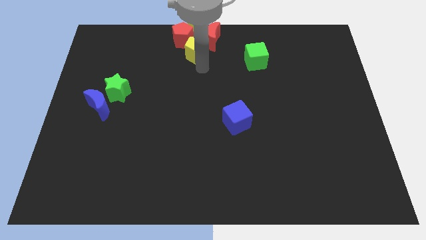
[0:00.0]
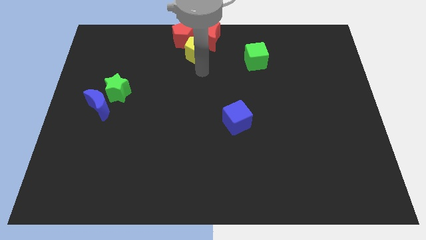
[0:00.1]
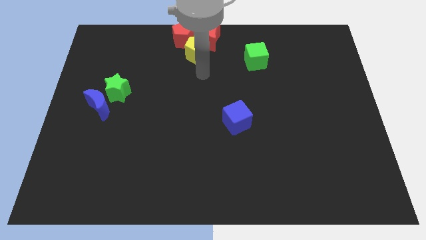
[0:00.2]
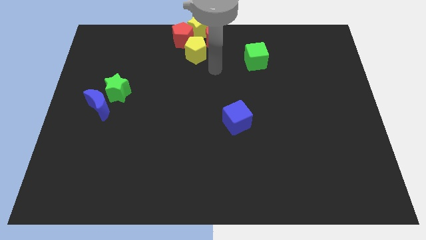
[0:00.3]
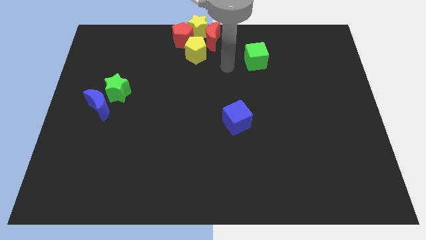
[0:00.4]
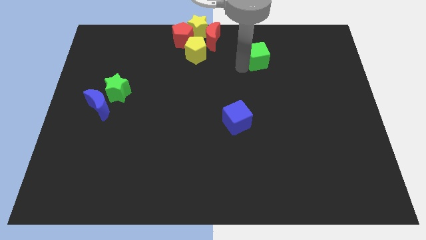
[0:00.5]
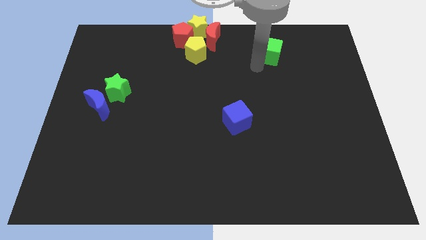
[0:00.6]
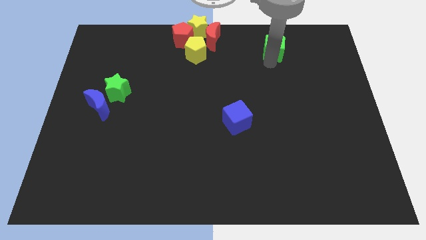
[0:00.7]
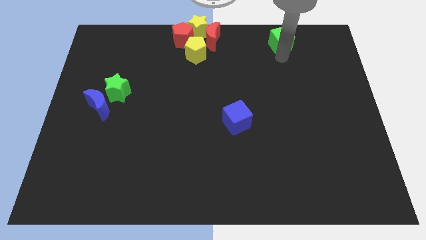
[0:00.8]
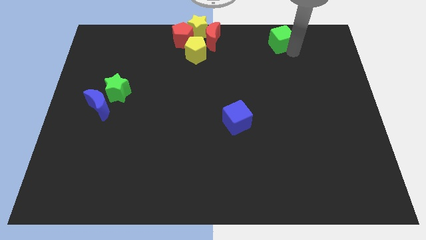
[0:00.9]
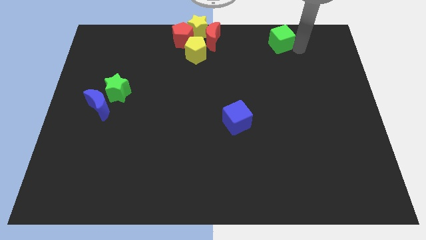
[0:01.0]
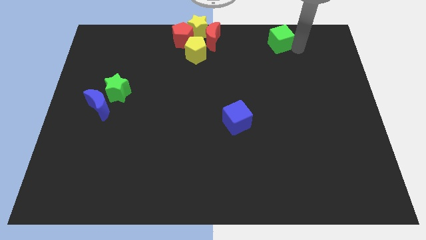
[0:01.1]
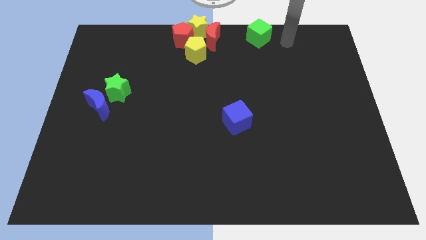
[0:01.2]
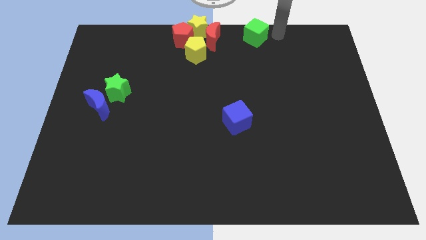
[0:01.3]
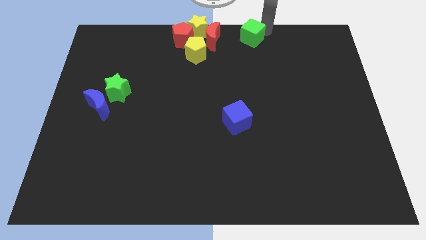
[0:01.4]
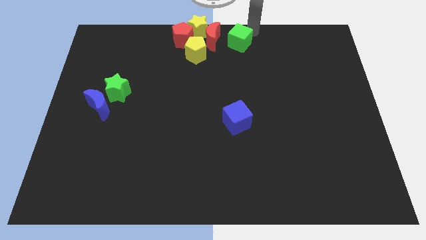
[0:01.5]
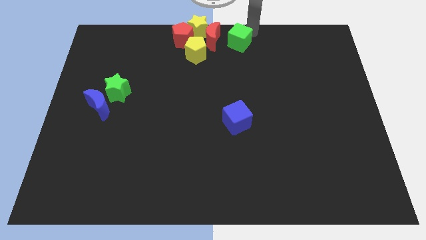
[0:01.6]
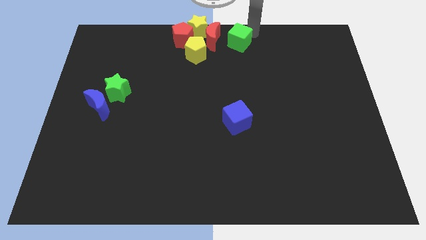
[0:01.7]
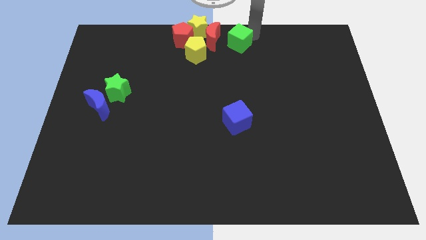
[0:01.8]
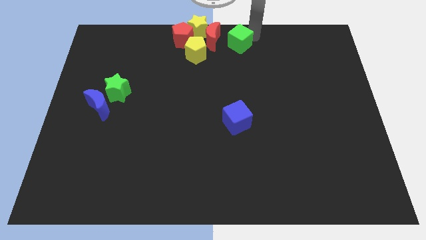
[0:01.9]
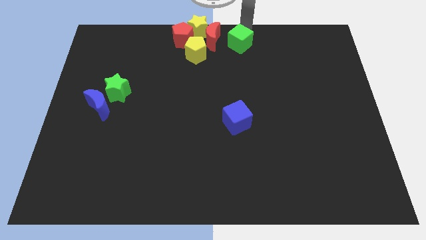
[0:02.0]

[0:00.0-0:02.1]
move the green cube to the right of red moon

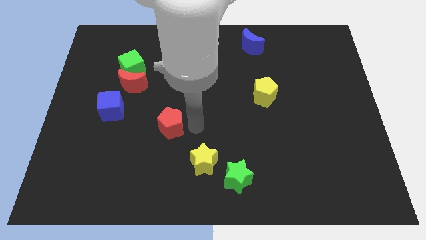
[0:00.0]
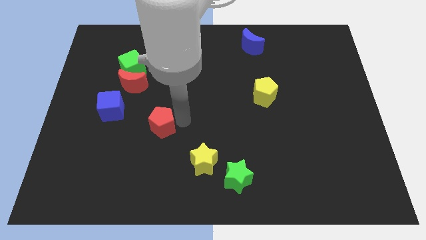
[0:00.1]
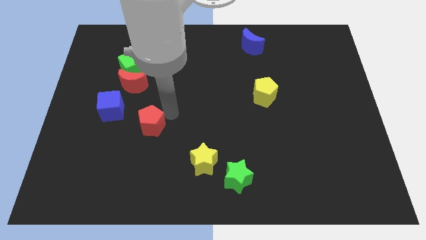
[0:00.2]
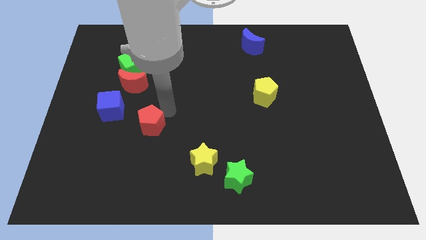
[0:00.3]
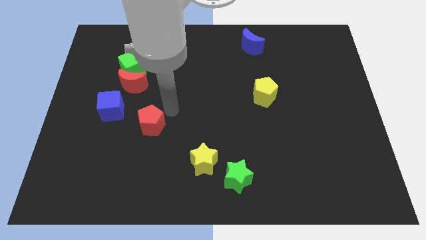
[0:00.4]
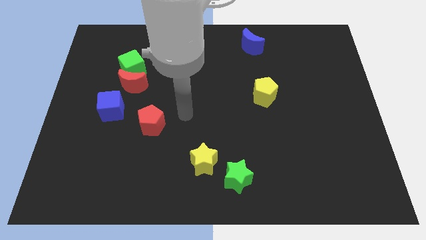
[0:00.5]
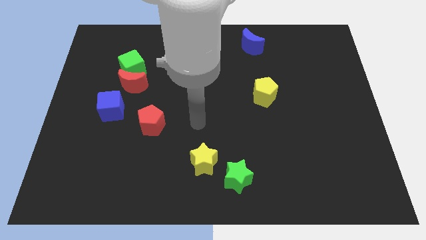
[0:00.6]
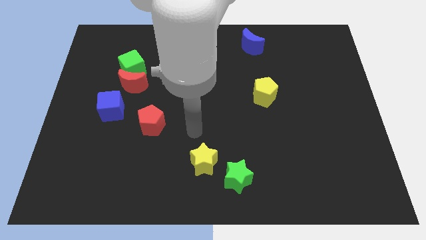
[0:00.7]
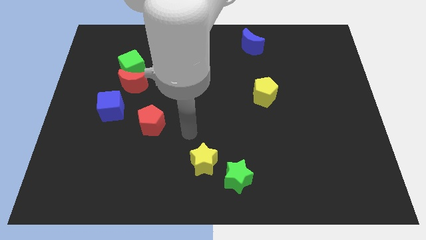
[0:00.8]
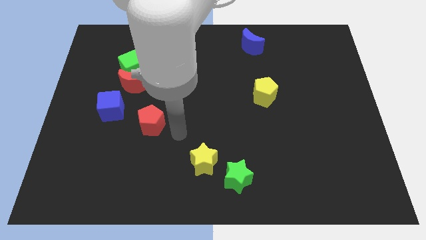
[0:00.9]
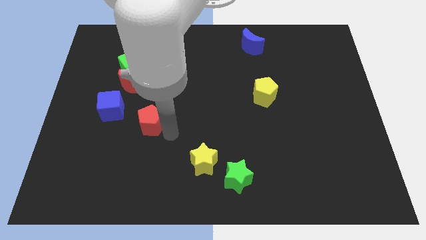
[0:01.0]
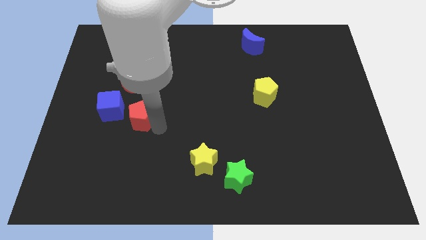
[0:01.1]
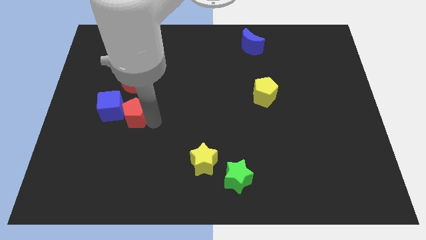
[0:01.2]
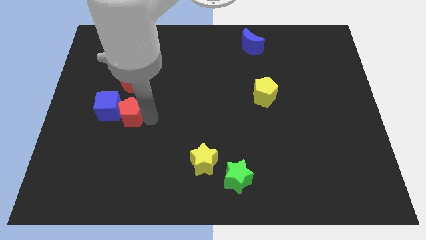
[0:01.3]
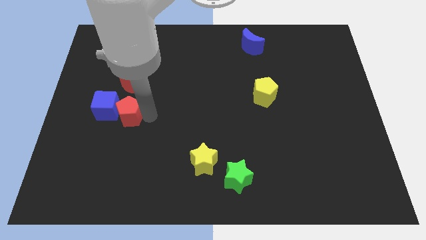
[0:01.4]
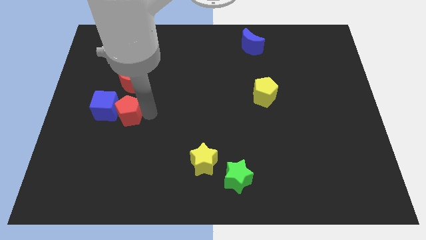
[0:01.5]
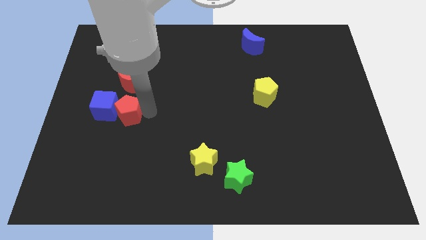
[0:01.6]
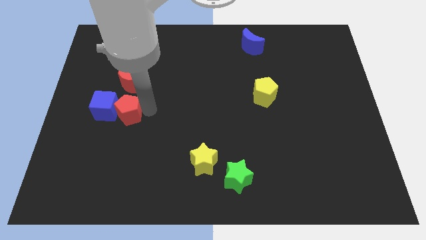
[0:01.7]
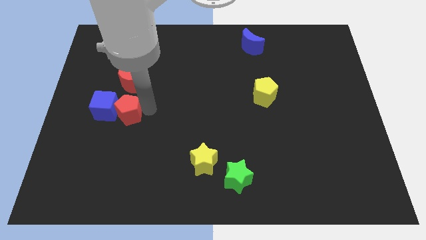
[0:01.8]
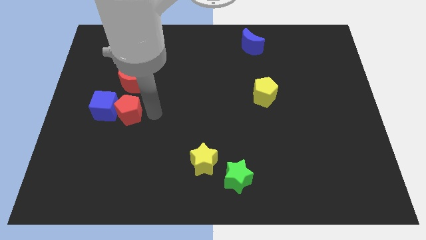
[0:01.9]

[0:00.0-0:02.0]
put the red pentagon into the blue cube

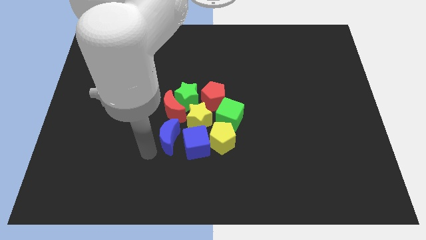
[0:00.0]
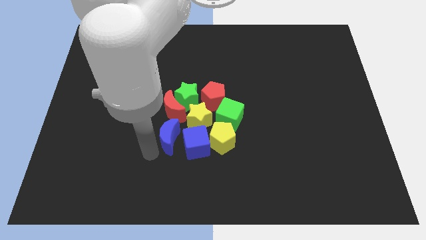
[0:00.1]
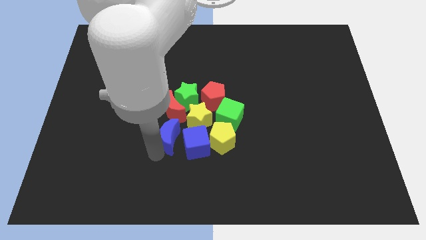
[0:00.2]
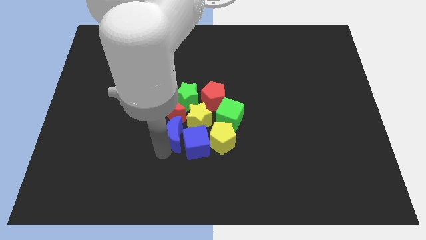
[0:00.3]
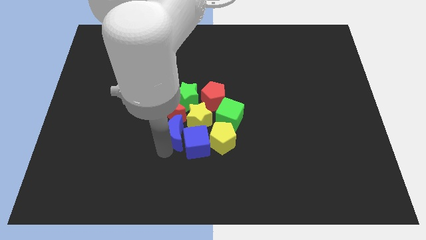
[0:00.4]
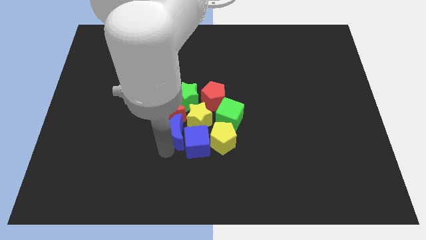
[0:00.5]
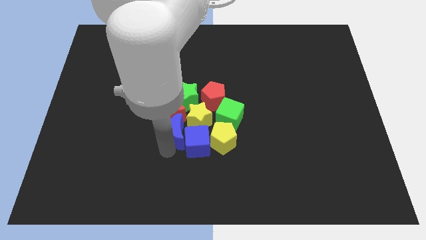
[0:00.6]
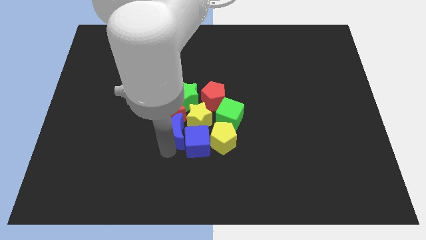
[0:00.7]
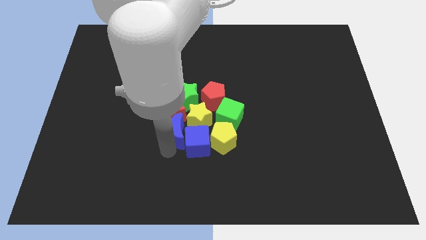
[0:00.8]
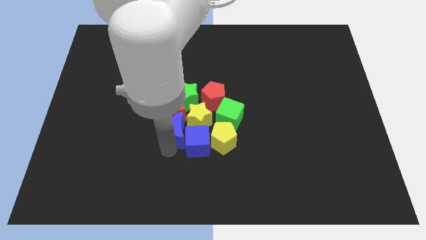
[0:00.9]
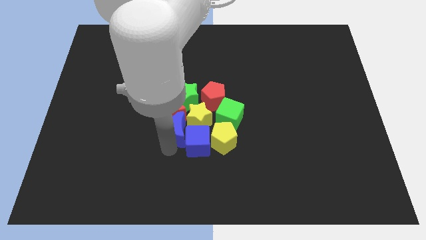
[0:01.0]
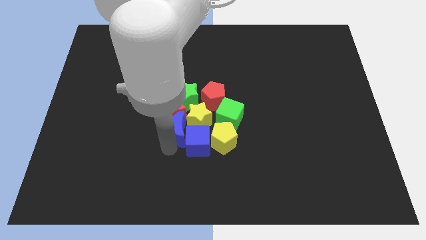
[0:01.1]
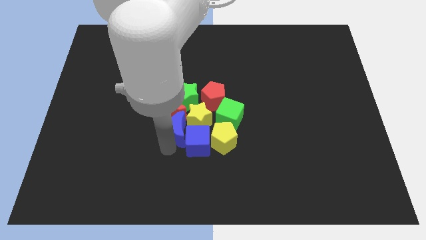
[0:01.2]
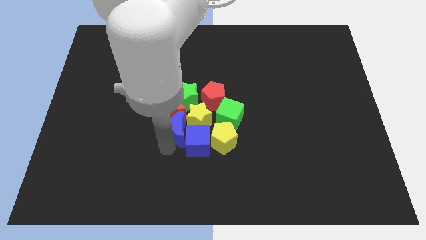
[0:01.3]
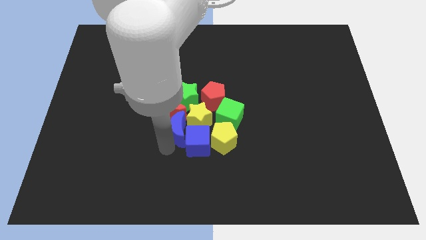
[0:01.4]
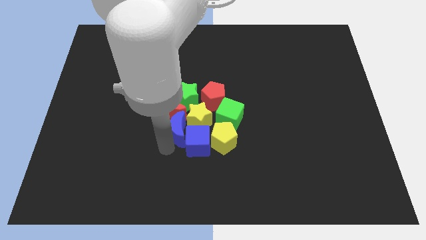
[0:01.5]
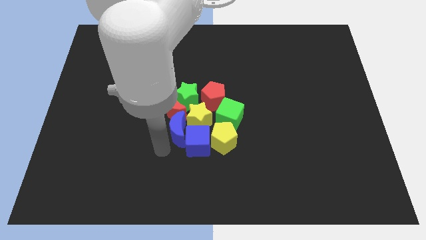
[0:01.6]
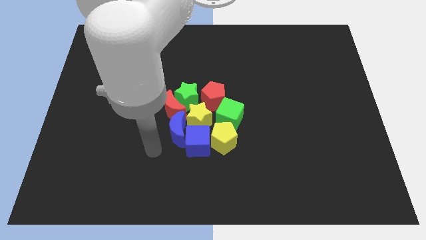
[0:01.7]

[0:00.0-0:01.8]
move the blue crescent slightly towards blue cube

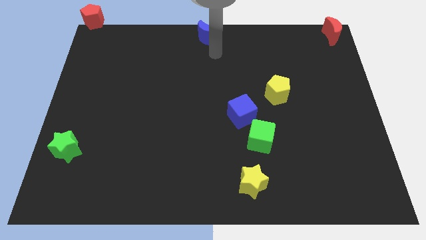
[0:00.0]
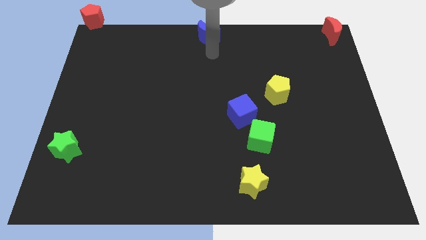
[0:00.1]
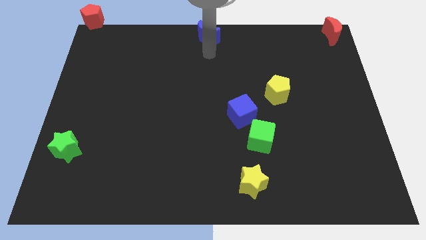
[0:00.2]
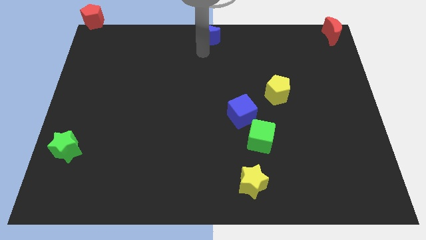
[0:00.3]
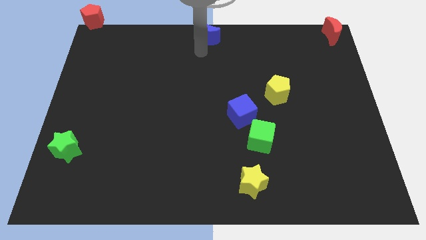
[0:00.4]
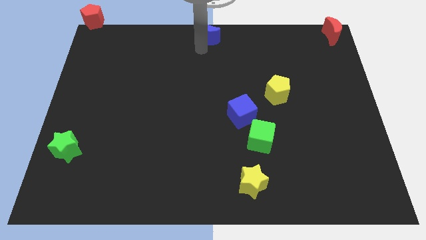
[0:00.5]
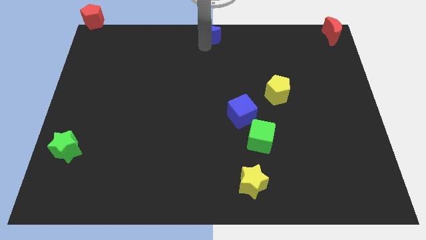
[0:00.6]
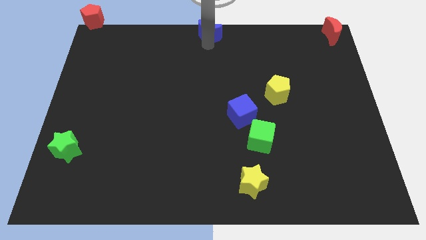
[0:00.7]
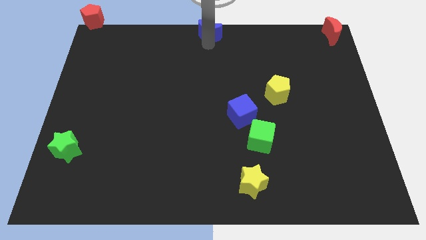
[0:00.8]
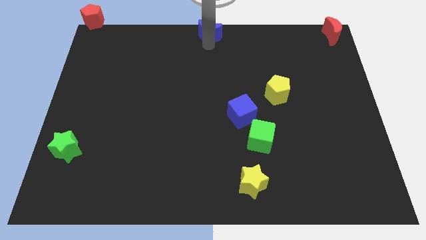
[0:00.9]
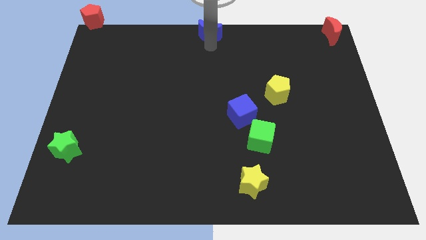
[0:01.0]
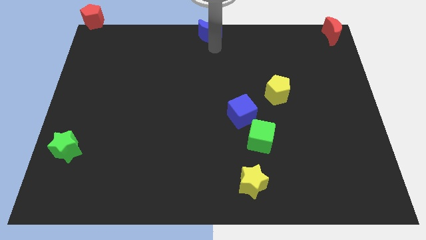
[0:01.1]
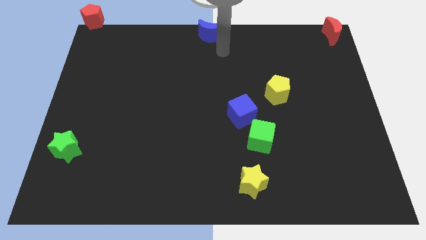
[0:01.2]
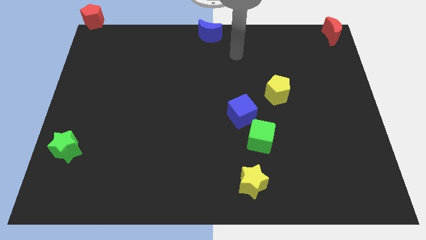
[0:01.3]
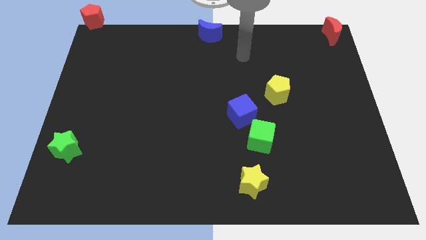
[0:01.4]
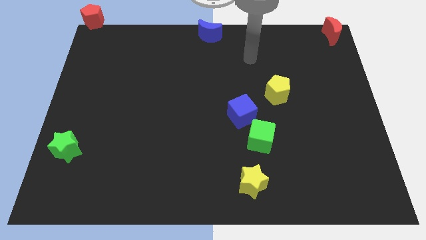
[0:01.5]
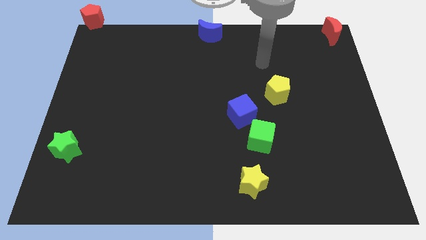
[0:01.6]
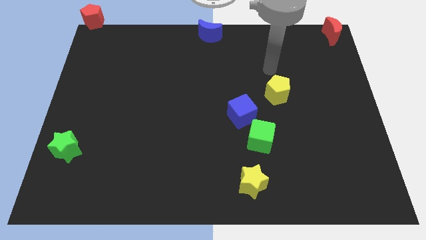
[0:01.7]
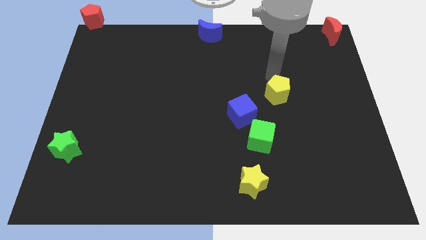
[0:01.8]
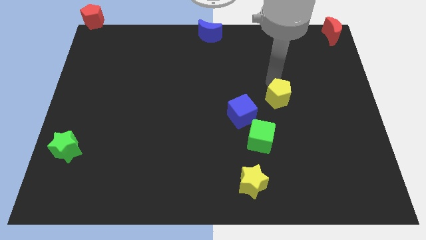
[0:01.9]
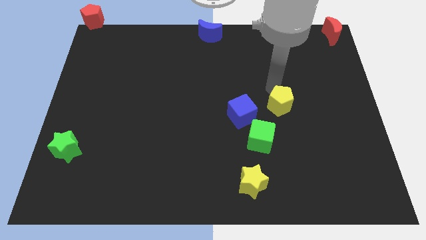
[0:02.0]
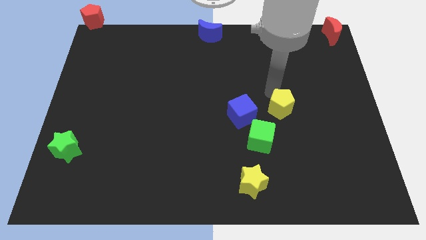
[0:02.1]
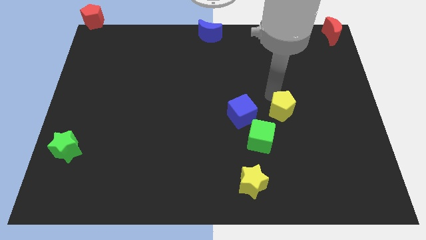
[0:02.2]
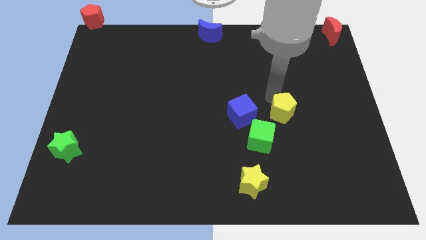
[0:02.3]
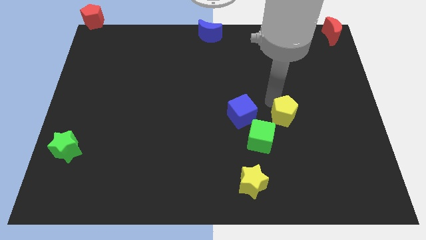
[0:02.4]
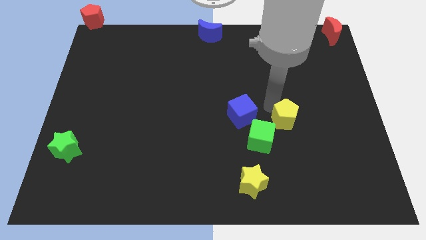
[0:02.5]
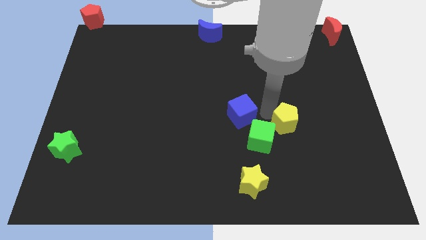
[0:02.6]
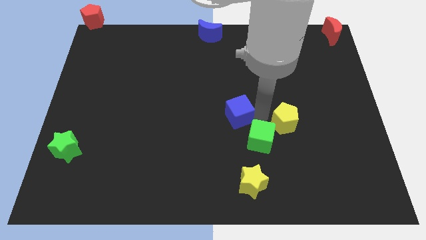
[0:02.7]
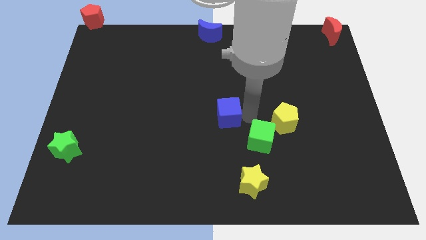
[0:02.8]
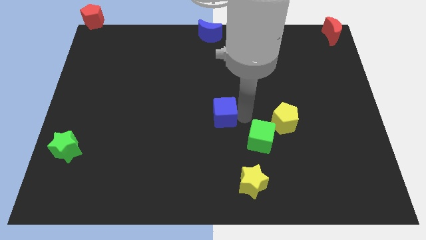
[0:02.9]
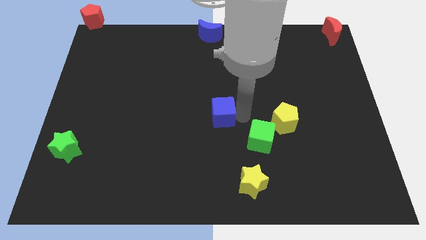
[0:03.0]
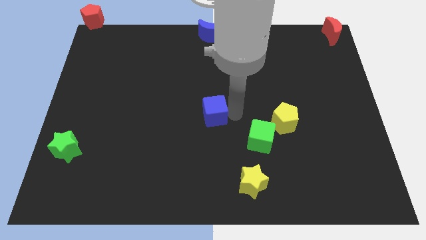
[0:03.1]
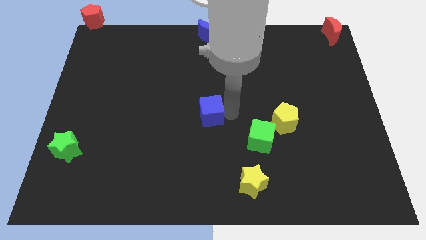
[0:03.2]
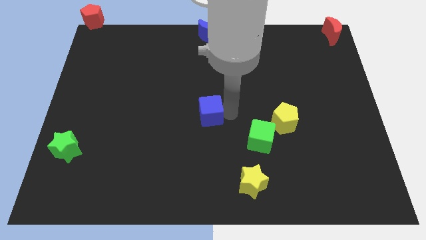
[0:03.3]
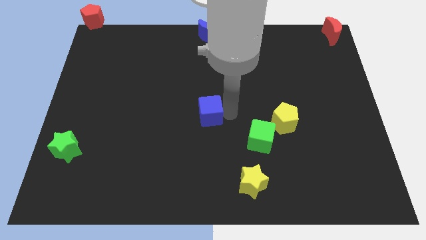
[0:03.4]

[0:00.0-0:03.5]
push blue cube below blue crescent
